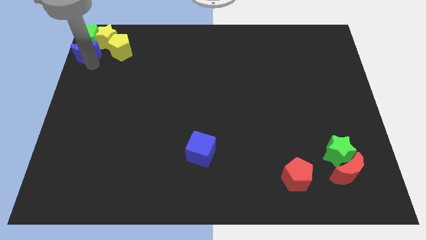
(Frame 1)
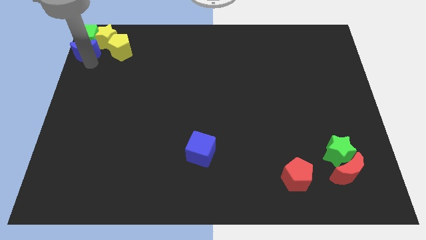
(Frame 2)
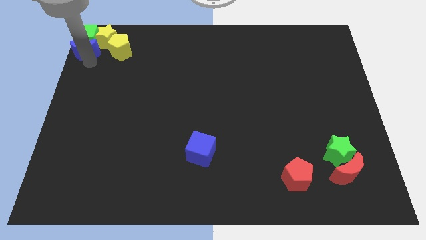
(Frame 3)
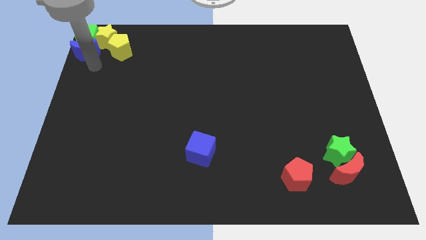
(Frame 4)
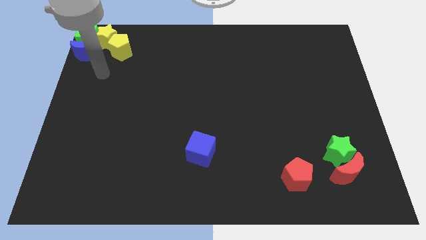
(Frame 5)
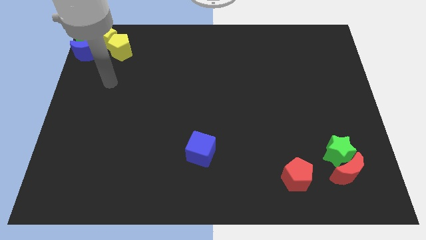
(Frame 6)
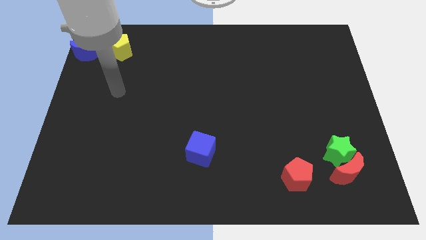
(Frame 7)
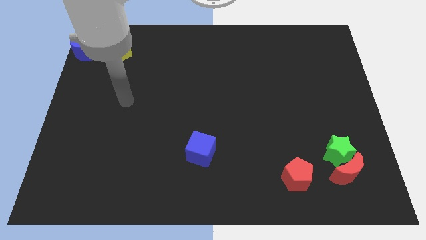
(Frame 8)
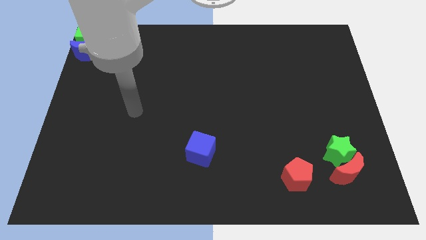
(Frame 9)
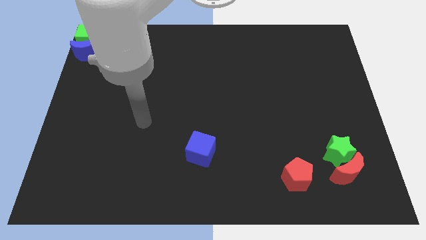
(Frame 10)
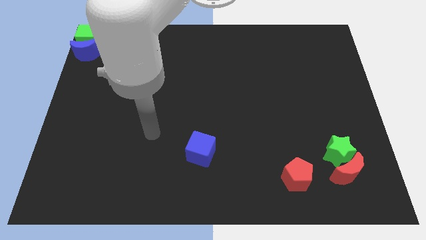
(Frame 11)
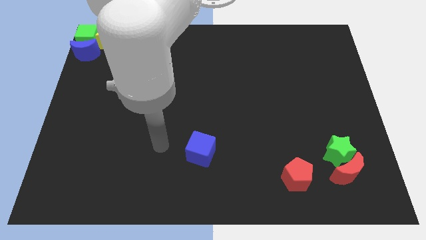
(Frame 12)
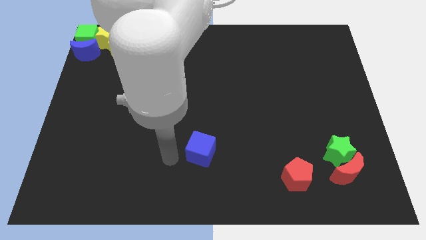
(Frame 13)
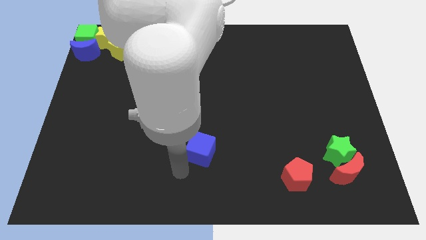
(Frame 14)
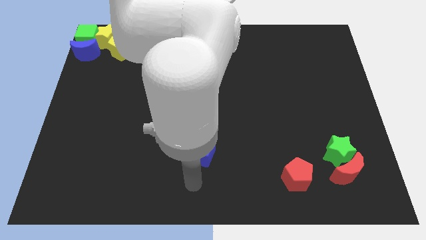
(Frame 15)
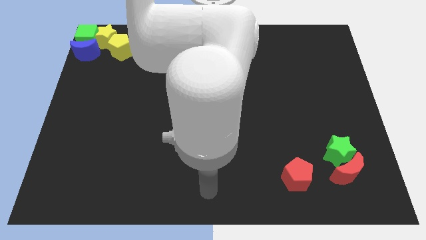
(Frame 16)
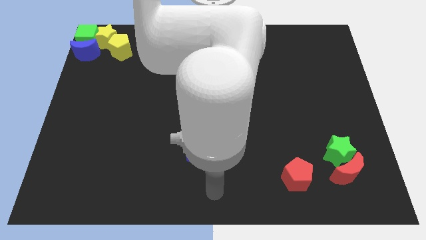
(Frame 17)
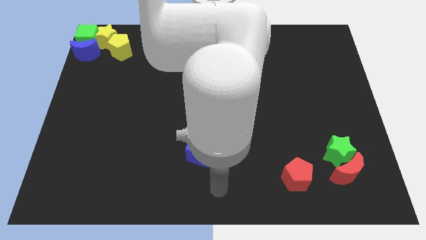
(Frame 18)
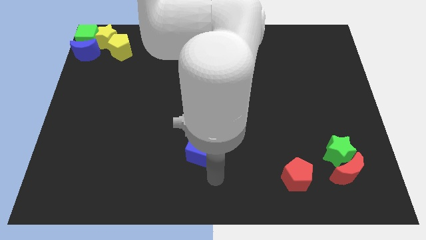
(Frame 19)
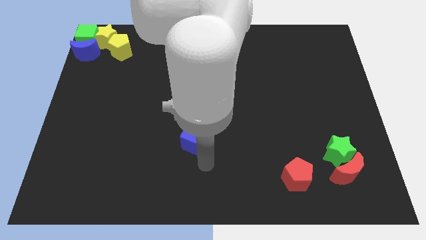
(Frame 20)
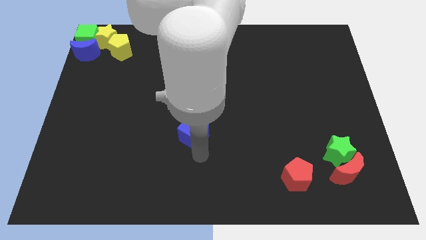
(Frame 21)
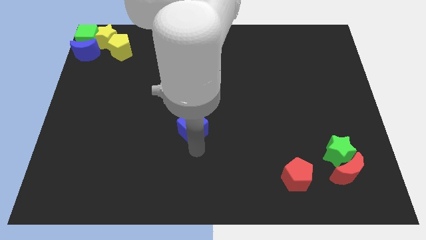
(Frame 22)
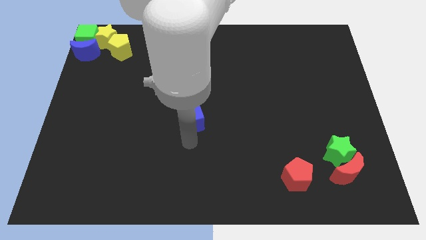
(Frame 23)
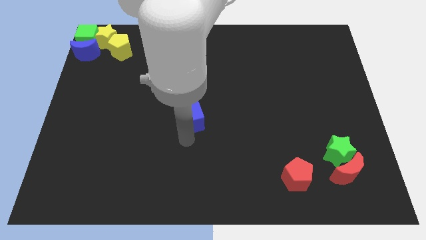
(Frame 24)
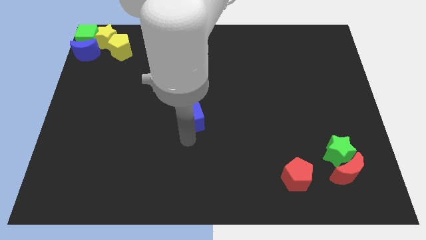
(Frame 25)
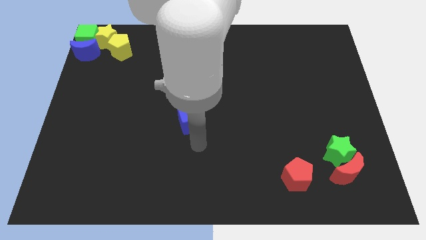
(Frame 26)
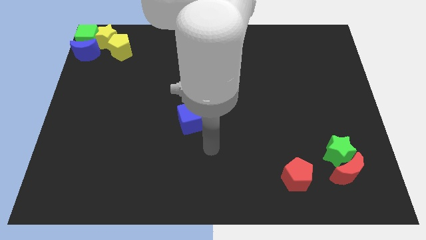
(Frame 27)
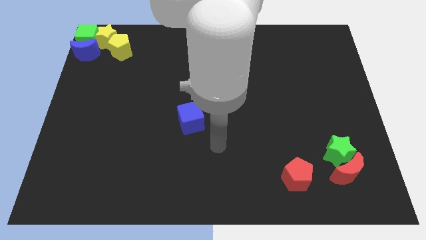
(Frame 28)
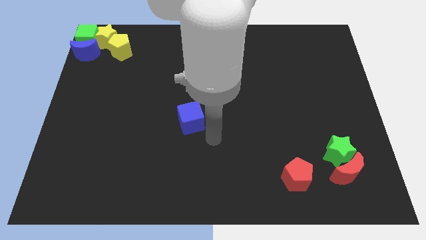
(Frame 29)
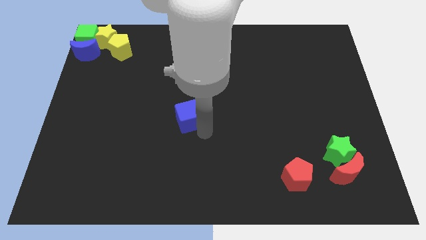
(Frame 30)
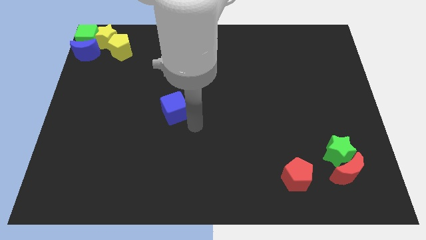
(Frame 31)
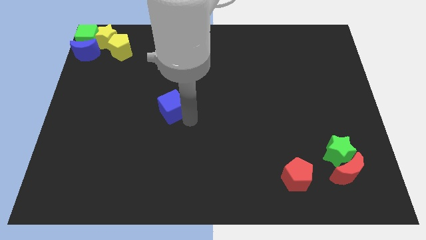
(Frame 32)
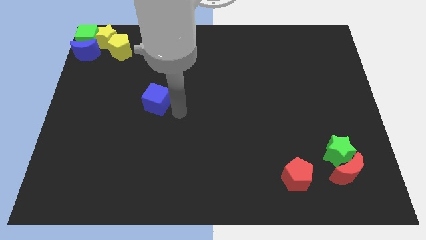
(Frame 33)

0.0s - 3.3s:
place the blue cube in between the red pentagon and the blu crescent

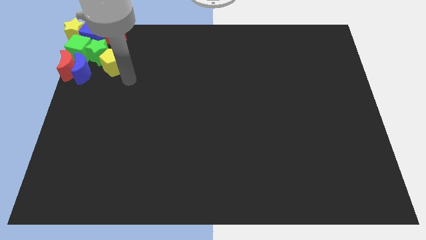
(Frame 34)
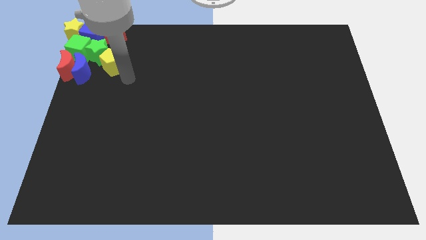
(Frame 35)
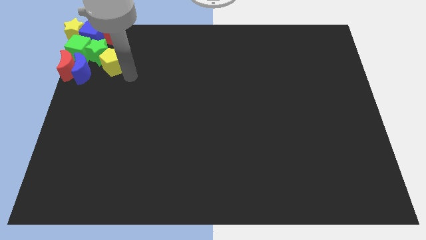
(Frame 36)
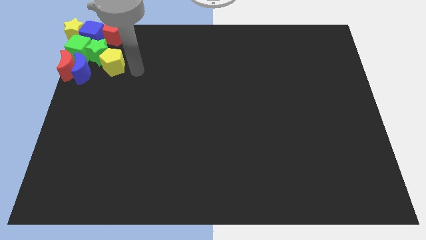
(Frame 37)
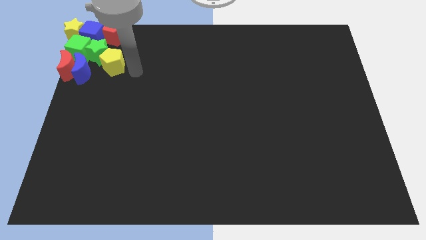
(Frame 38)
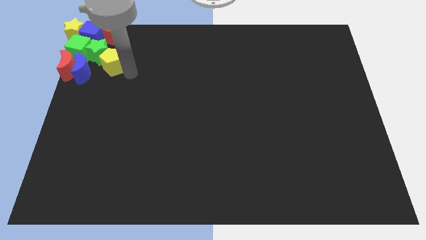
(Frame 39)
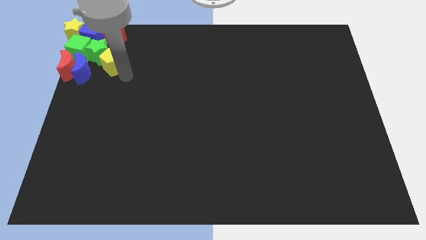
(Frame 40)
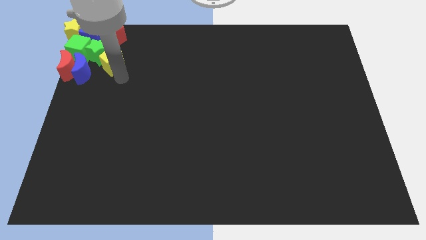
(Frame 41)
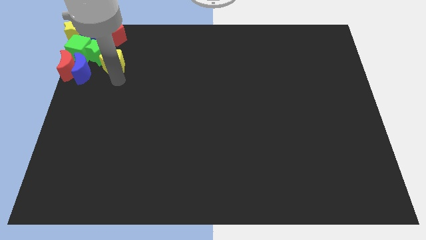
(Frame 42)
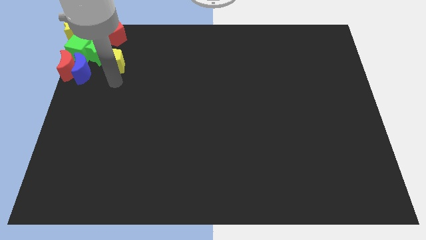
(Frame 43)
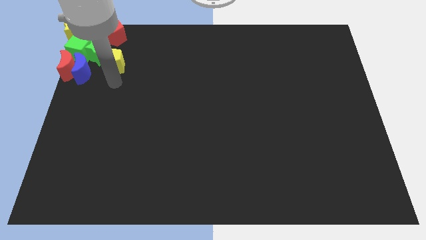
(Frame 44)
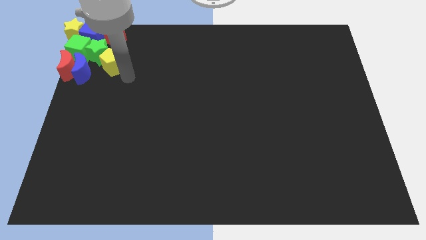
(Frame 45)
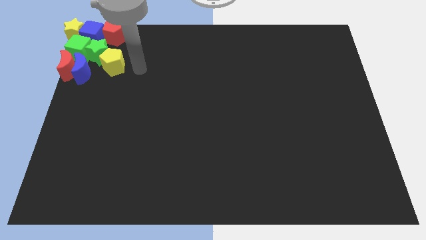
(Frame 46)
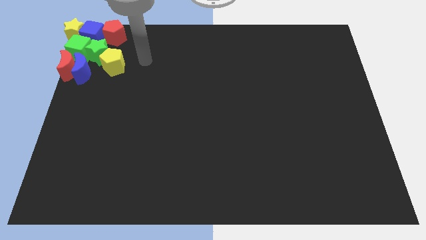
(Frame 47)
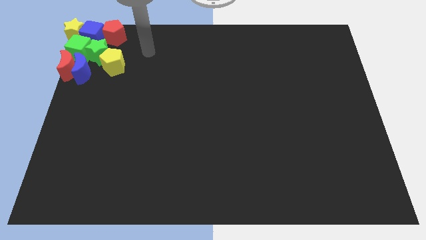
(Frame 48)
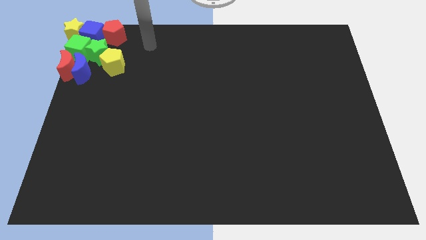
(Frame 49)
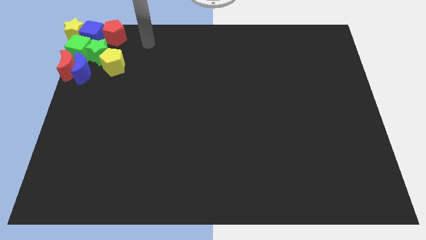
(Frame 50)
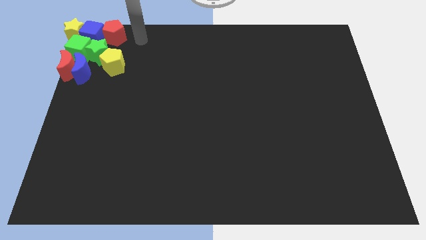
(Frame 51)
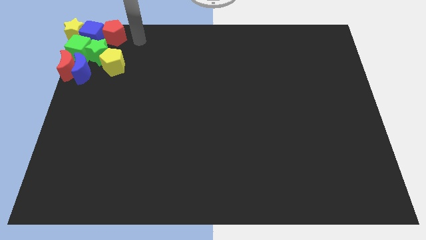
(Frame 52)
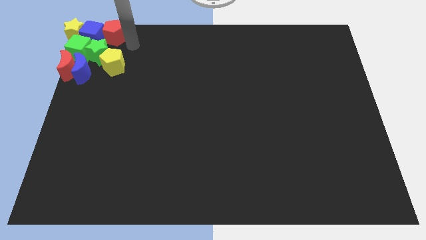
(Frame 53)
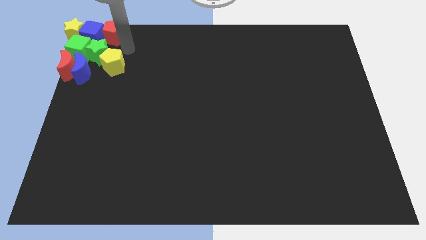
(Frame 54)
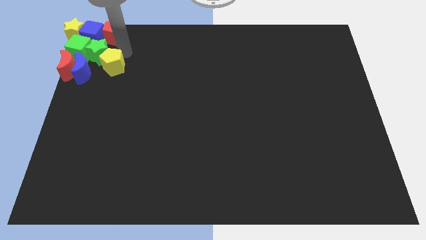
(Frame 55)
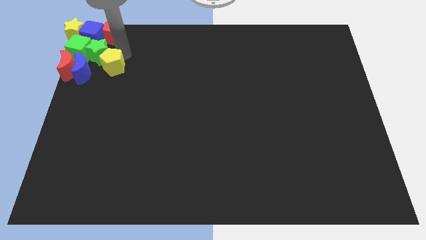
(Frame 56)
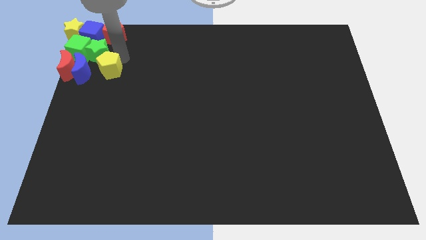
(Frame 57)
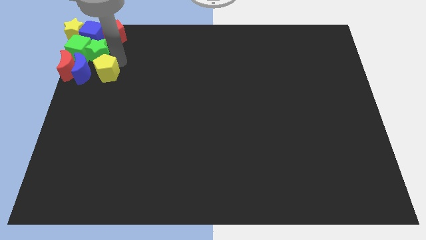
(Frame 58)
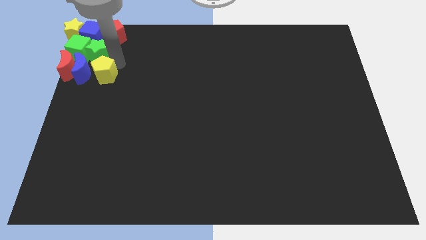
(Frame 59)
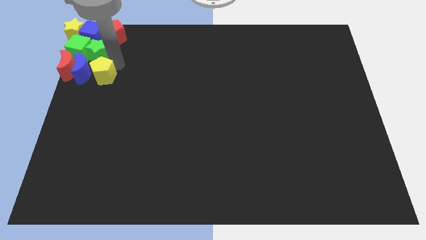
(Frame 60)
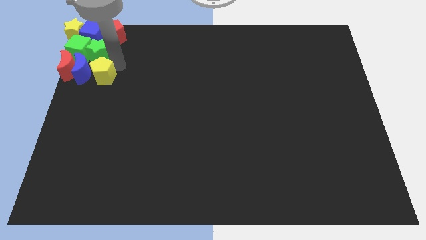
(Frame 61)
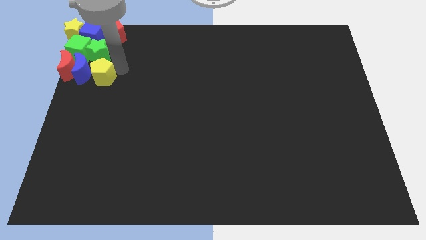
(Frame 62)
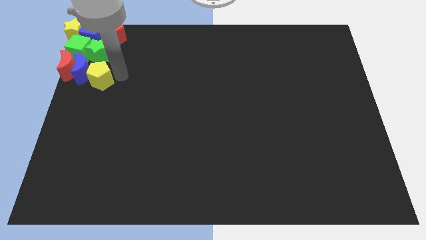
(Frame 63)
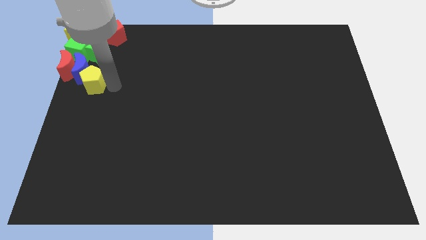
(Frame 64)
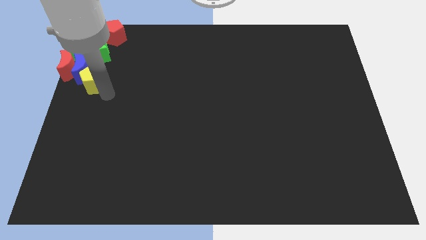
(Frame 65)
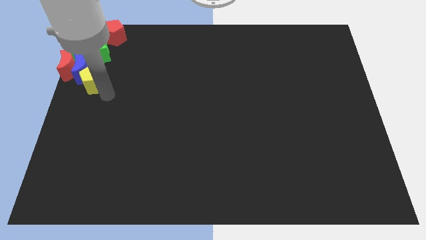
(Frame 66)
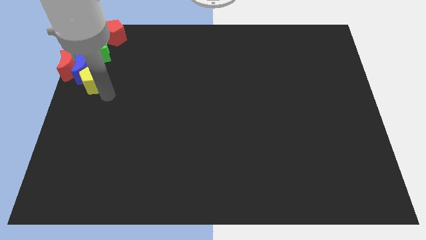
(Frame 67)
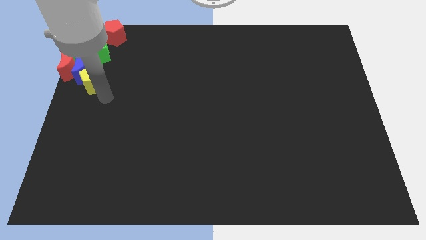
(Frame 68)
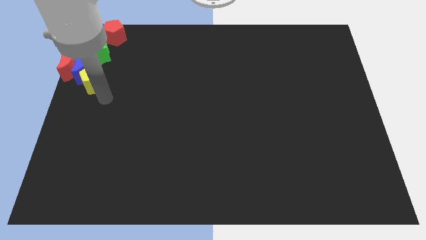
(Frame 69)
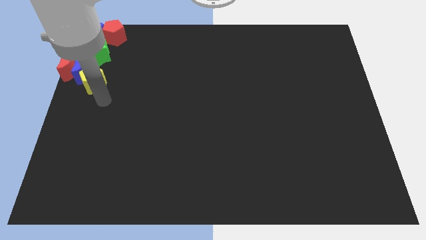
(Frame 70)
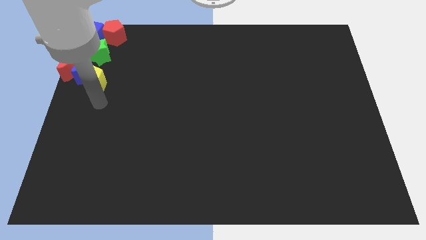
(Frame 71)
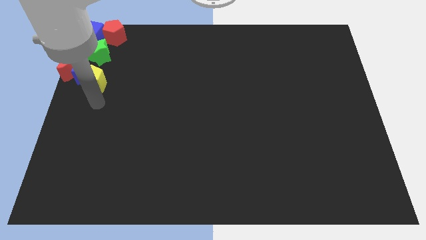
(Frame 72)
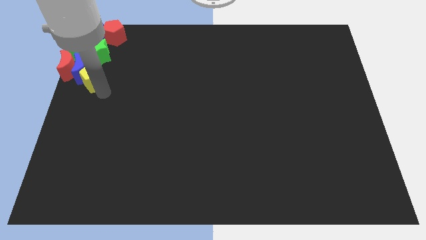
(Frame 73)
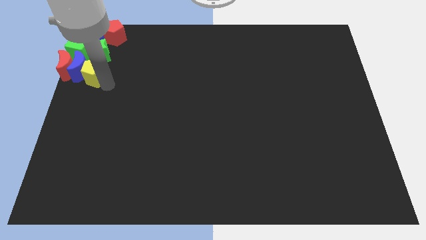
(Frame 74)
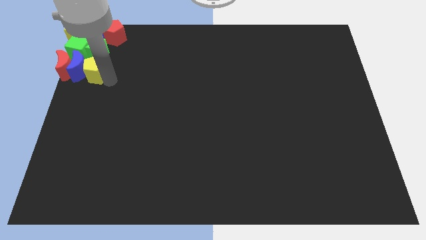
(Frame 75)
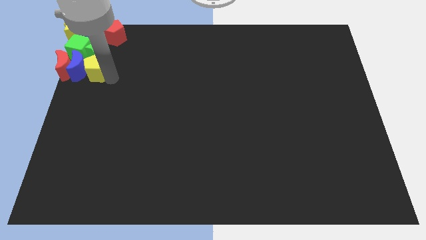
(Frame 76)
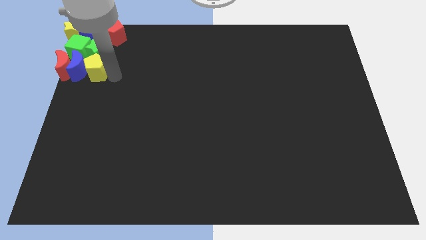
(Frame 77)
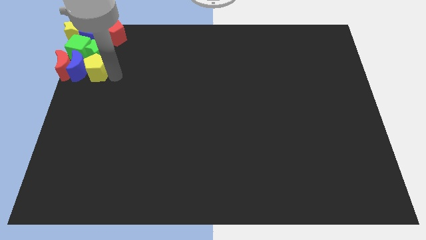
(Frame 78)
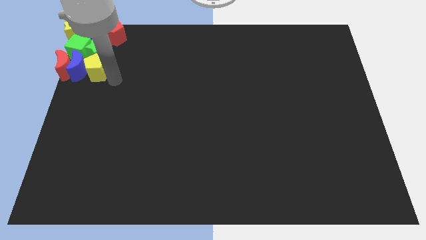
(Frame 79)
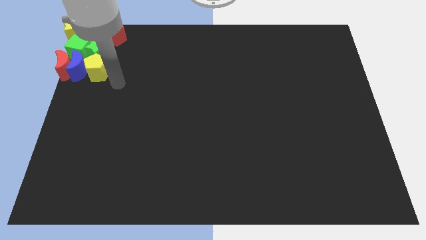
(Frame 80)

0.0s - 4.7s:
place yellow pentagon to the right of blue crescent

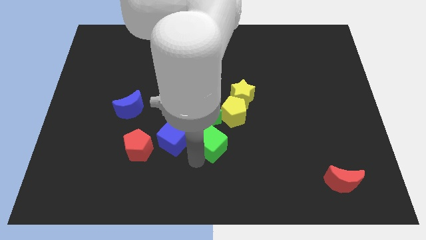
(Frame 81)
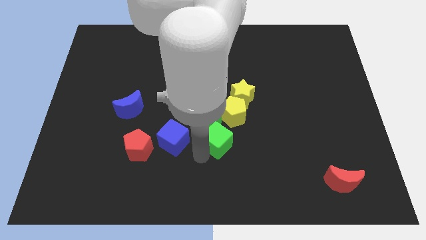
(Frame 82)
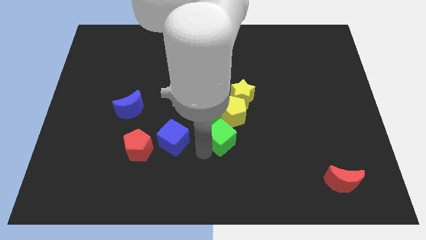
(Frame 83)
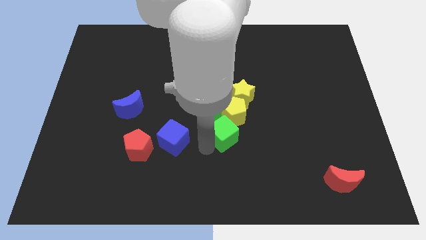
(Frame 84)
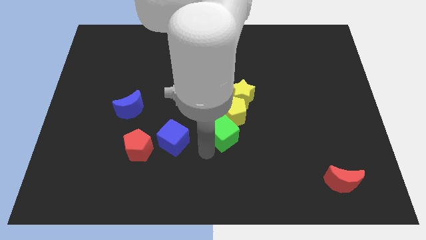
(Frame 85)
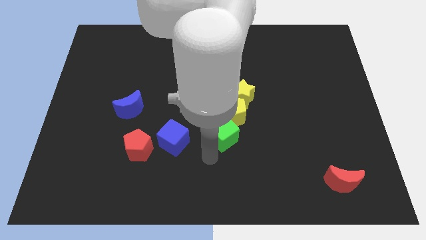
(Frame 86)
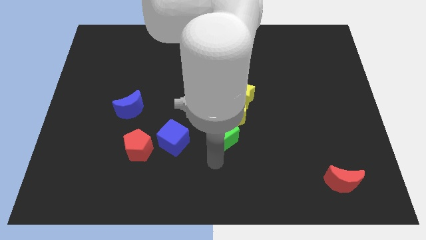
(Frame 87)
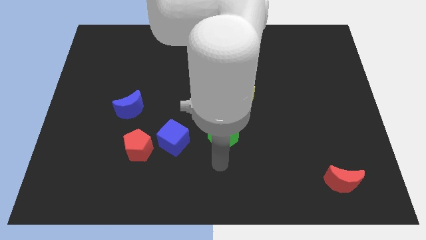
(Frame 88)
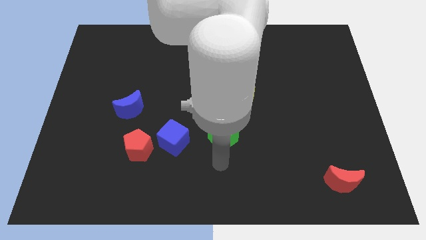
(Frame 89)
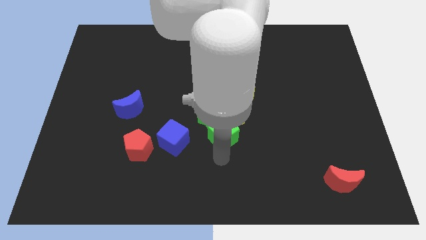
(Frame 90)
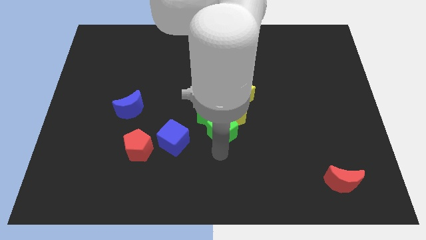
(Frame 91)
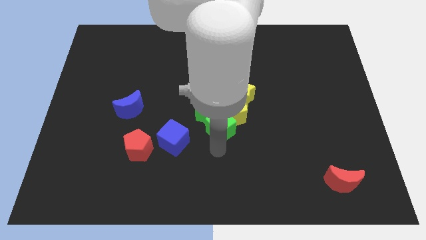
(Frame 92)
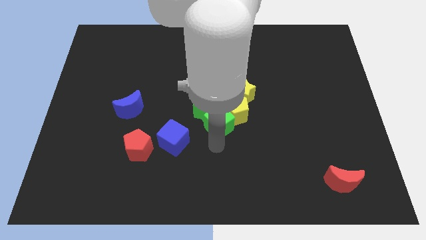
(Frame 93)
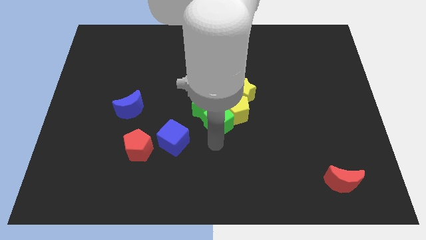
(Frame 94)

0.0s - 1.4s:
push the green cube into green star
